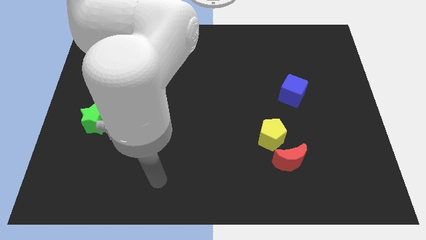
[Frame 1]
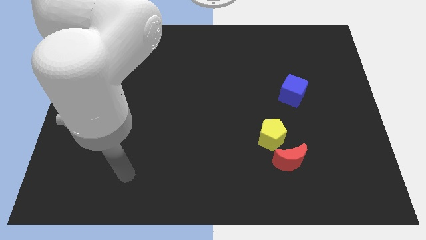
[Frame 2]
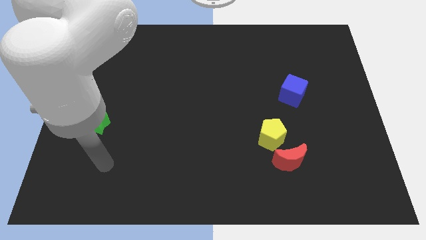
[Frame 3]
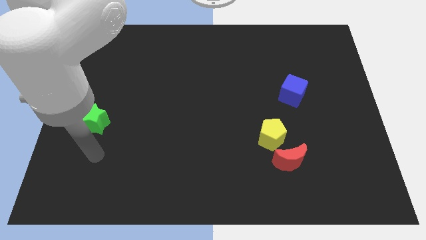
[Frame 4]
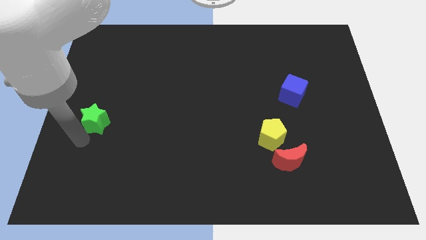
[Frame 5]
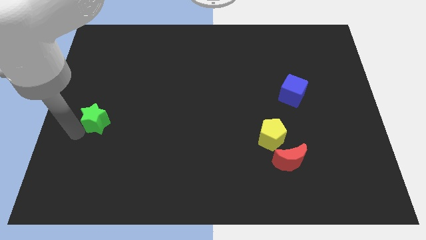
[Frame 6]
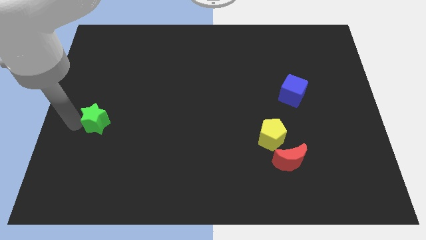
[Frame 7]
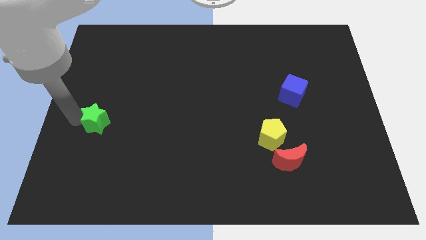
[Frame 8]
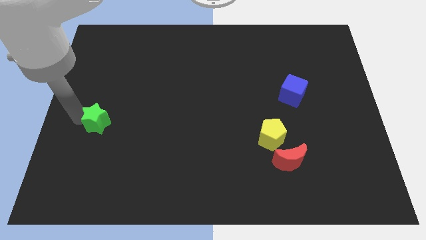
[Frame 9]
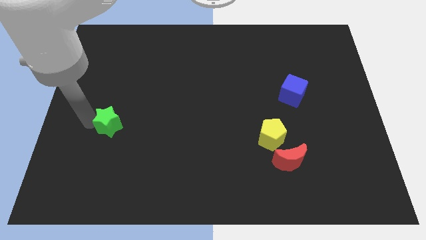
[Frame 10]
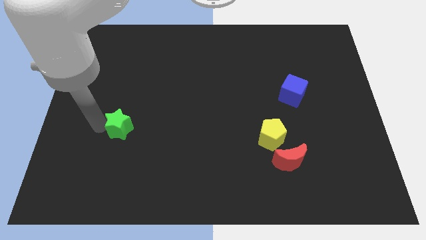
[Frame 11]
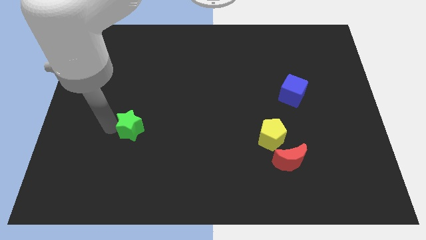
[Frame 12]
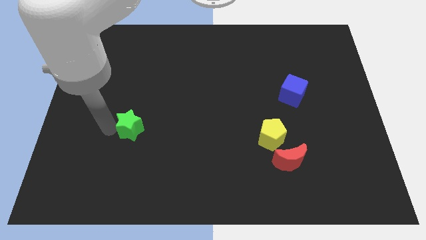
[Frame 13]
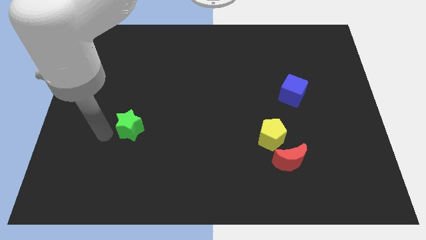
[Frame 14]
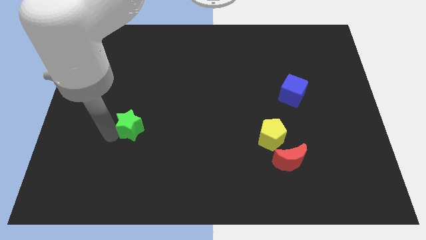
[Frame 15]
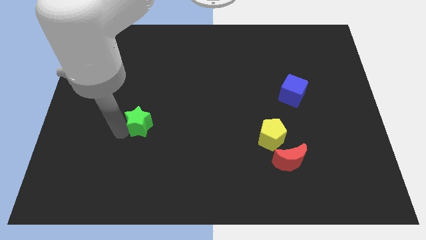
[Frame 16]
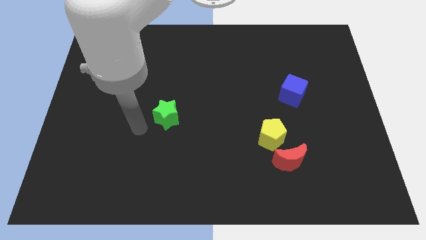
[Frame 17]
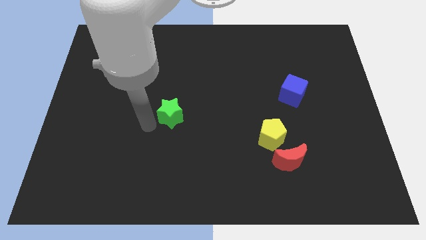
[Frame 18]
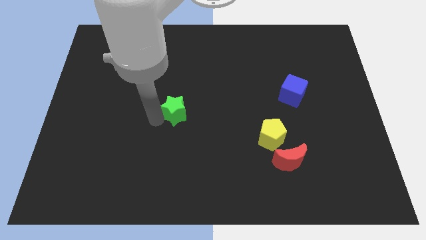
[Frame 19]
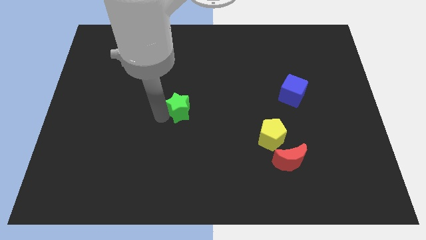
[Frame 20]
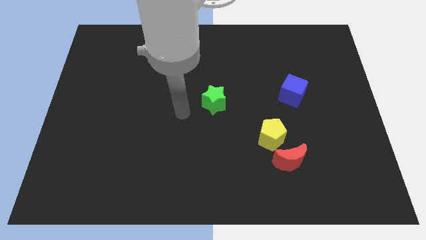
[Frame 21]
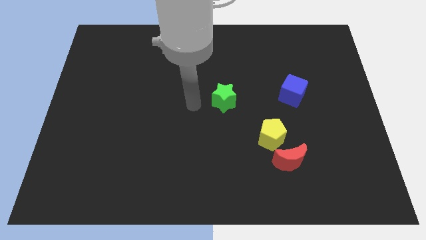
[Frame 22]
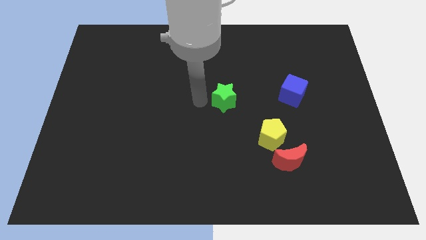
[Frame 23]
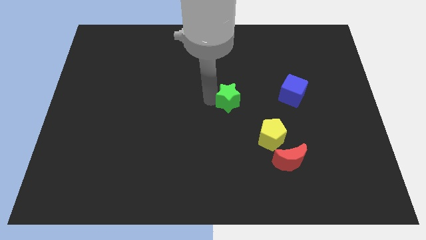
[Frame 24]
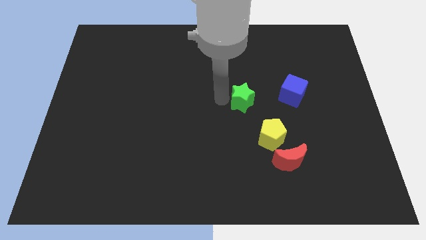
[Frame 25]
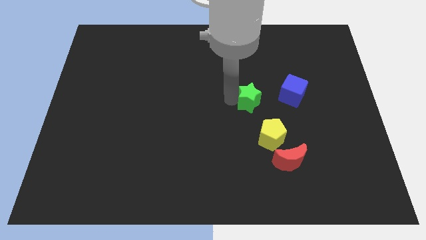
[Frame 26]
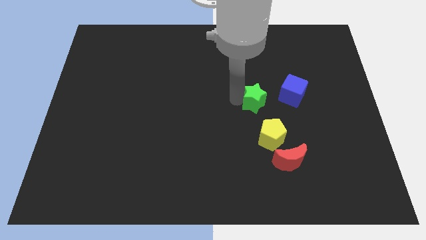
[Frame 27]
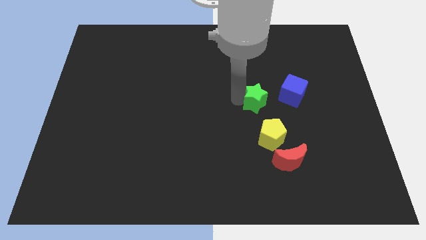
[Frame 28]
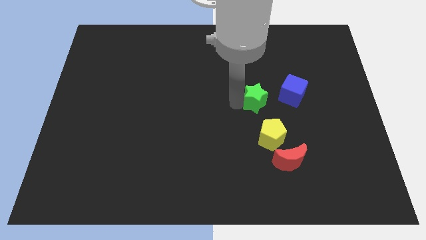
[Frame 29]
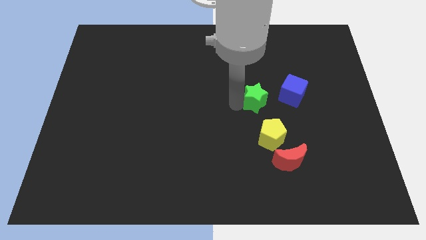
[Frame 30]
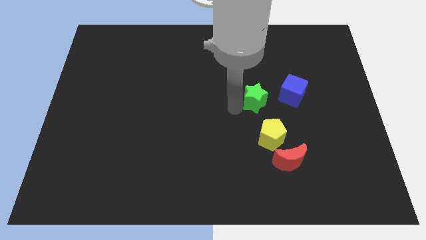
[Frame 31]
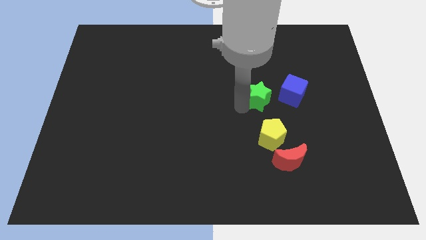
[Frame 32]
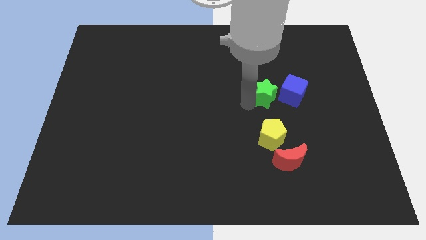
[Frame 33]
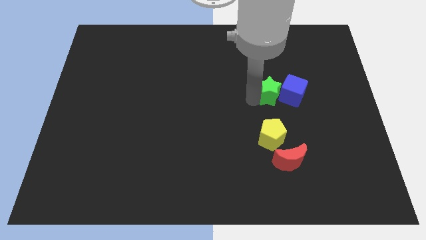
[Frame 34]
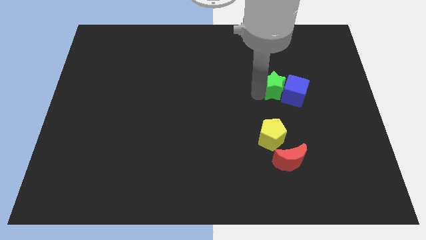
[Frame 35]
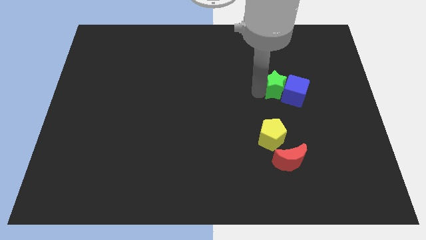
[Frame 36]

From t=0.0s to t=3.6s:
slide the green star to the cube

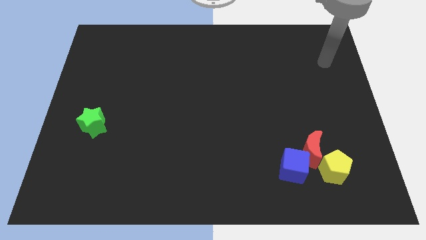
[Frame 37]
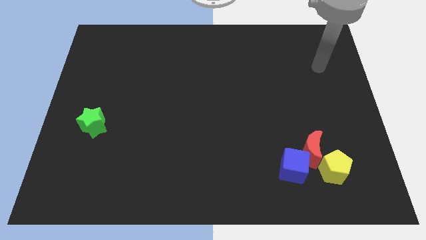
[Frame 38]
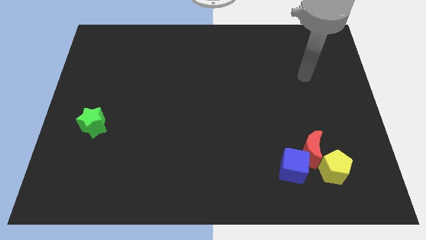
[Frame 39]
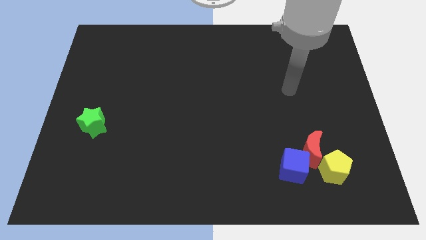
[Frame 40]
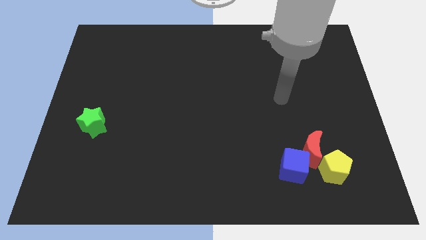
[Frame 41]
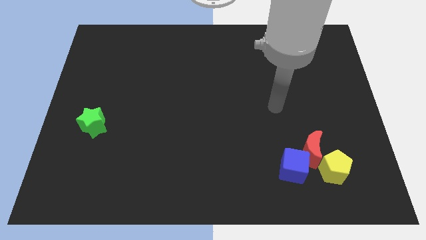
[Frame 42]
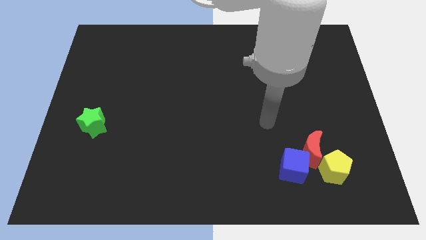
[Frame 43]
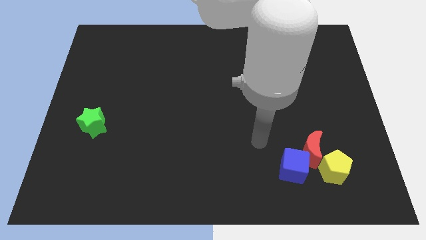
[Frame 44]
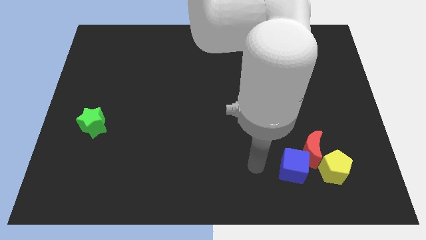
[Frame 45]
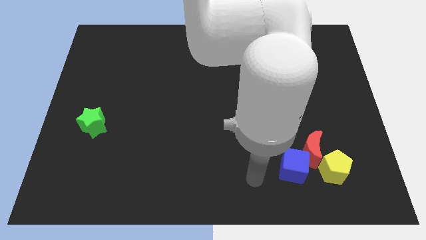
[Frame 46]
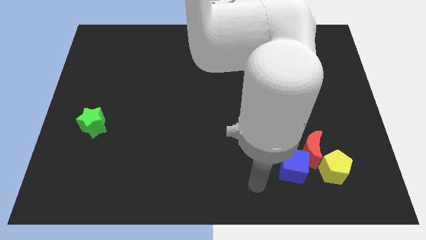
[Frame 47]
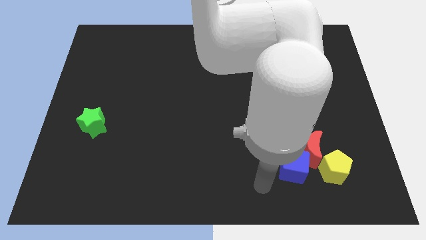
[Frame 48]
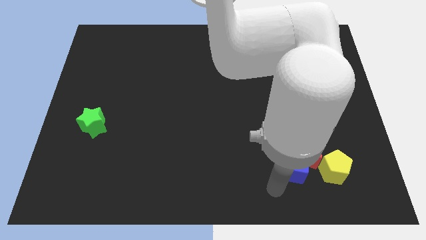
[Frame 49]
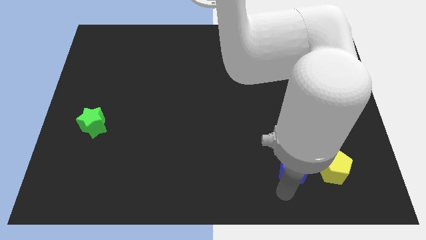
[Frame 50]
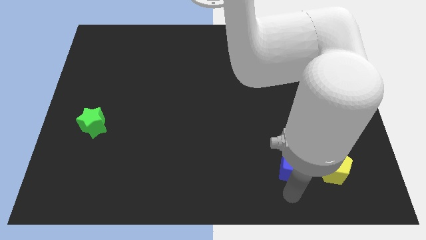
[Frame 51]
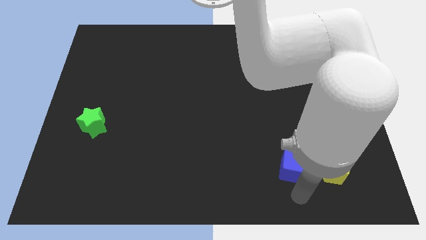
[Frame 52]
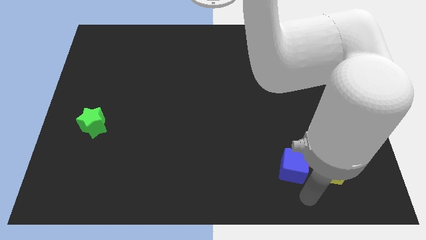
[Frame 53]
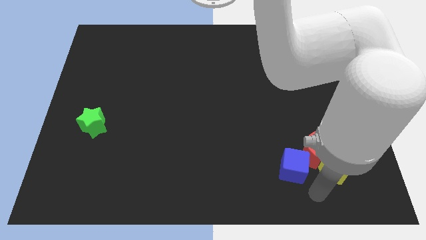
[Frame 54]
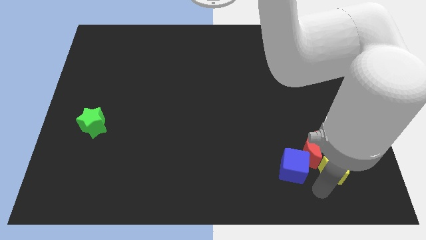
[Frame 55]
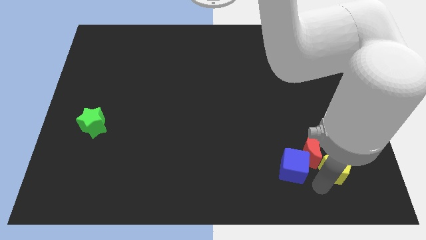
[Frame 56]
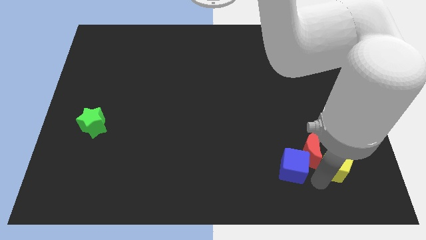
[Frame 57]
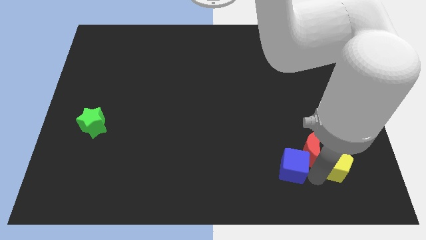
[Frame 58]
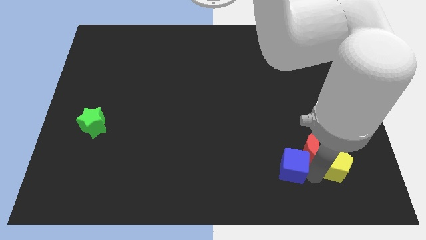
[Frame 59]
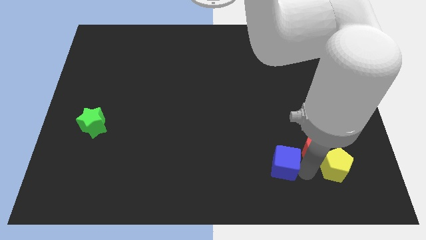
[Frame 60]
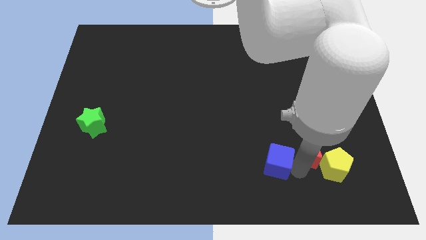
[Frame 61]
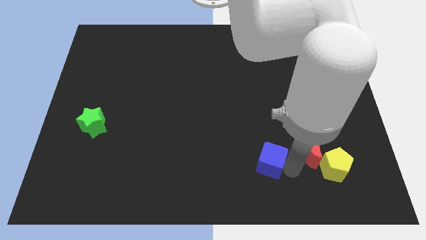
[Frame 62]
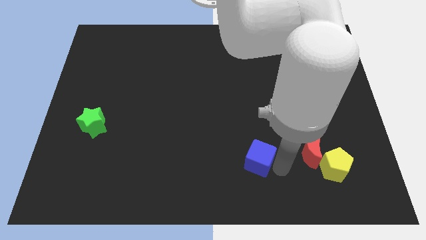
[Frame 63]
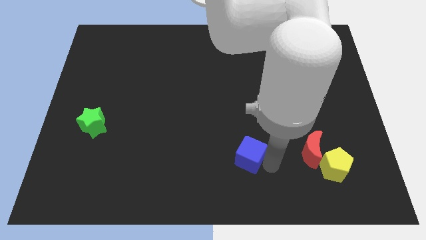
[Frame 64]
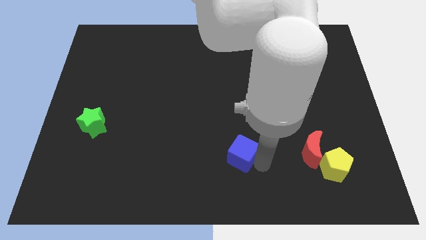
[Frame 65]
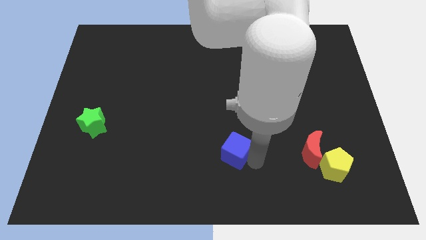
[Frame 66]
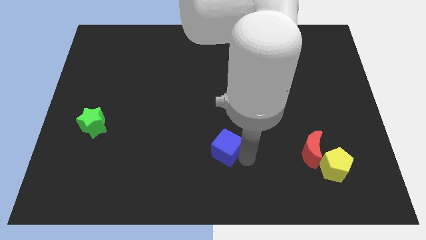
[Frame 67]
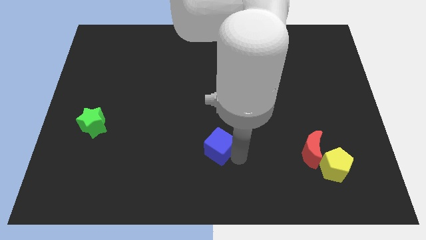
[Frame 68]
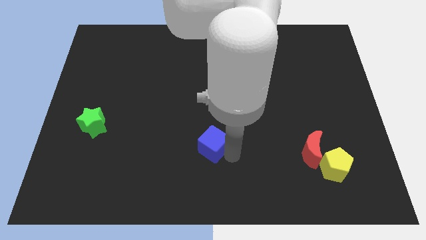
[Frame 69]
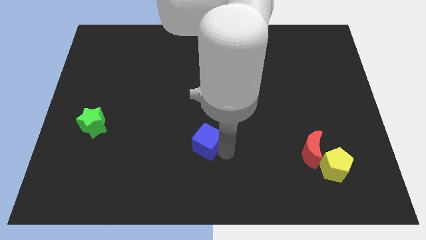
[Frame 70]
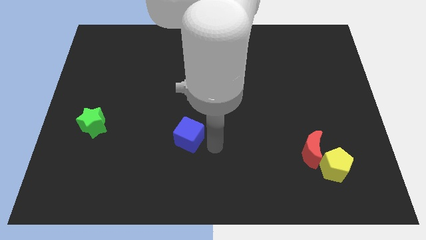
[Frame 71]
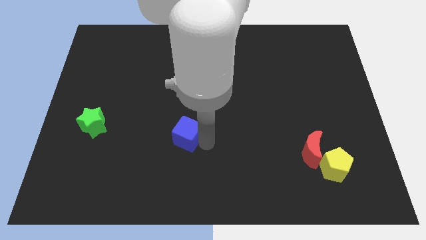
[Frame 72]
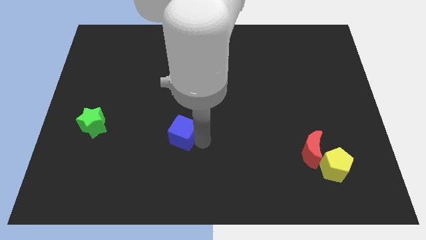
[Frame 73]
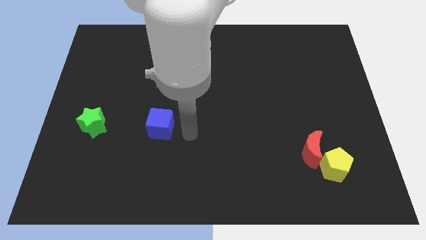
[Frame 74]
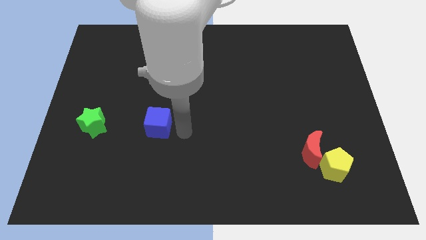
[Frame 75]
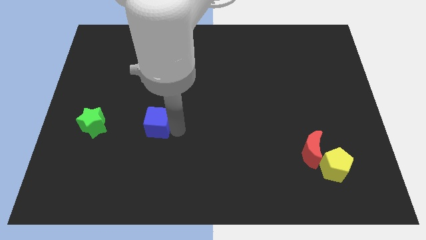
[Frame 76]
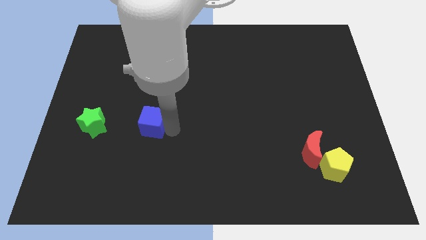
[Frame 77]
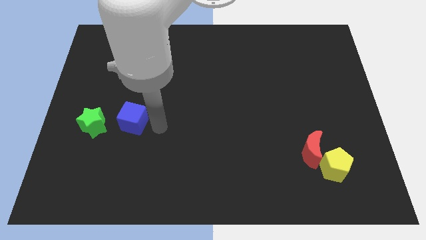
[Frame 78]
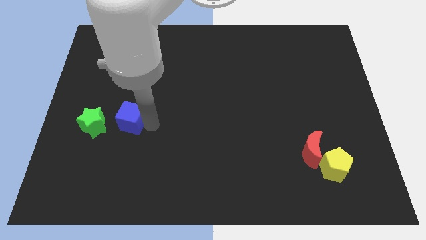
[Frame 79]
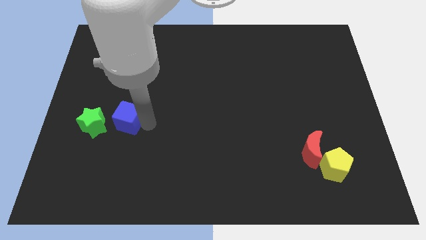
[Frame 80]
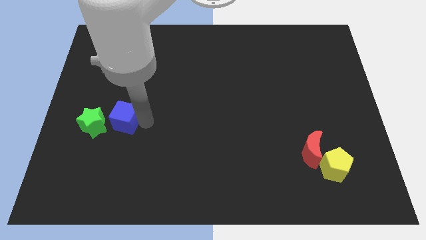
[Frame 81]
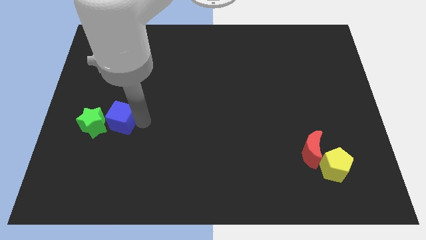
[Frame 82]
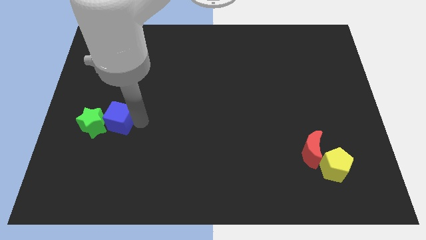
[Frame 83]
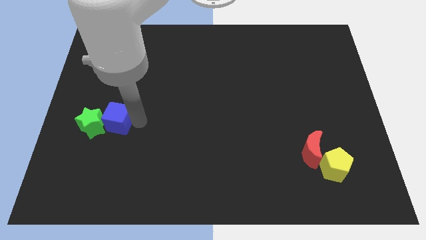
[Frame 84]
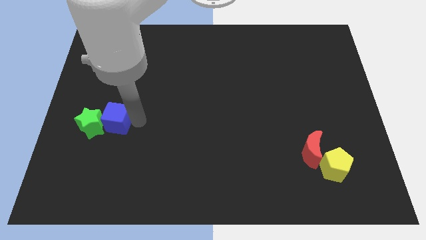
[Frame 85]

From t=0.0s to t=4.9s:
push the blue block next to the star
